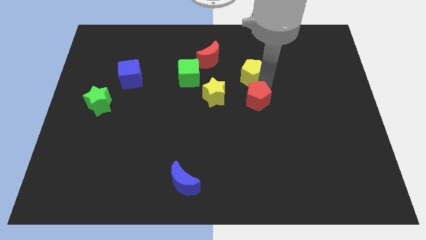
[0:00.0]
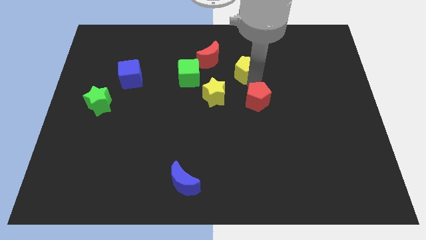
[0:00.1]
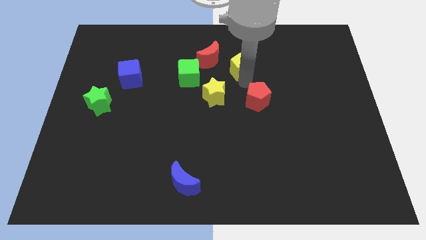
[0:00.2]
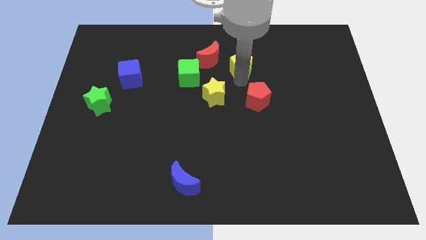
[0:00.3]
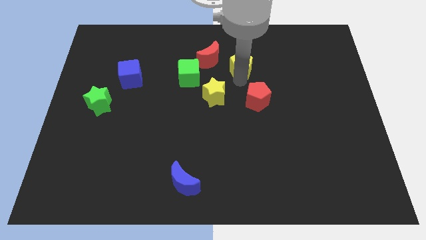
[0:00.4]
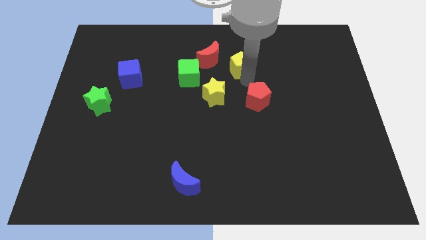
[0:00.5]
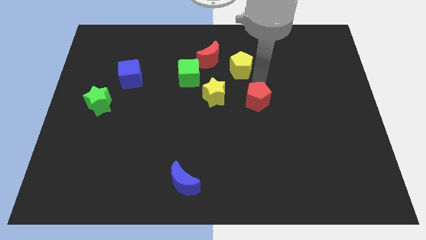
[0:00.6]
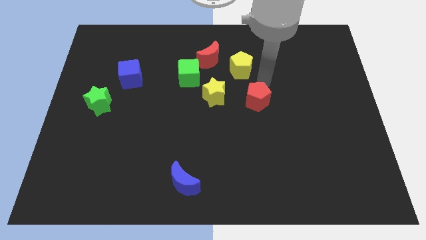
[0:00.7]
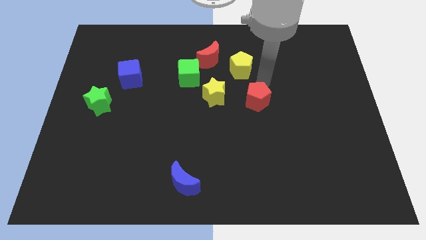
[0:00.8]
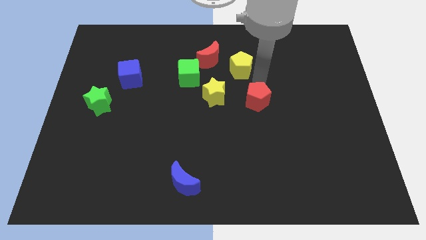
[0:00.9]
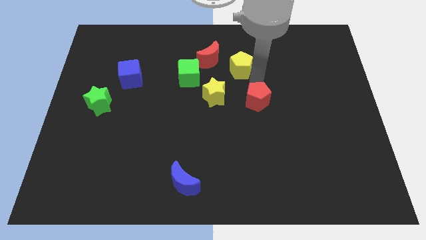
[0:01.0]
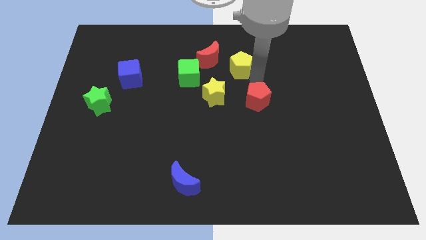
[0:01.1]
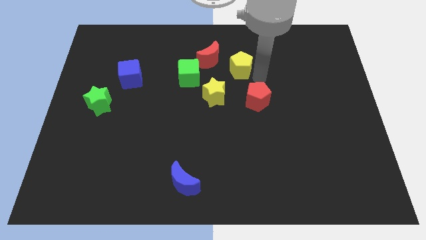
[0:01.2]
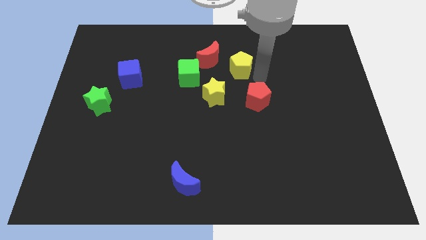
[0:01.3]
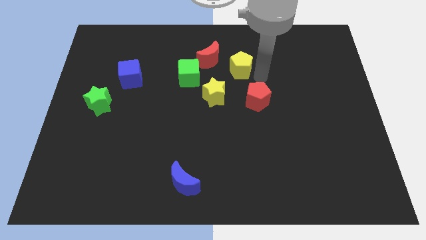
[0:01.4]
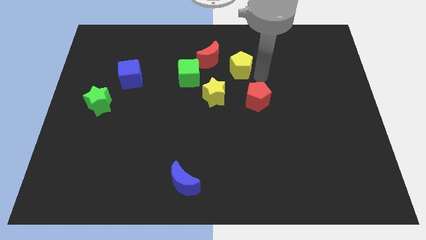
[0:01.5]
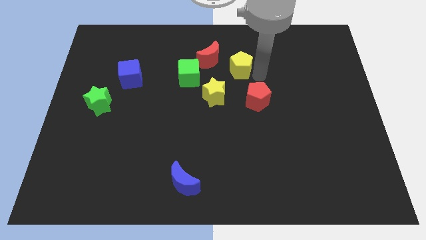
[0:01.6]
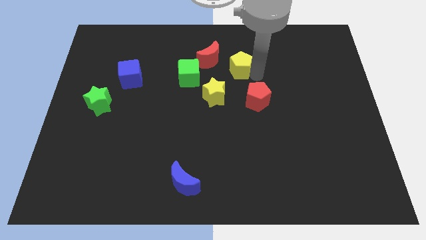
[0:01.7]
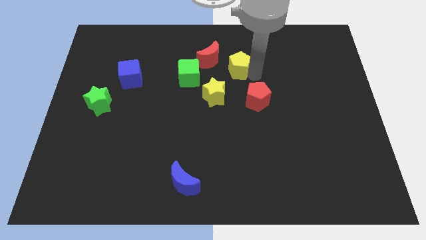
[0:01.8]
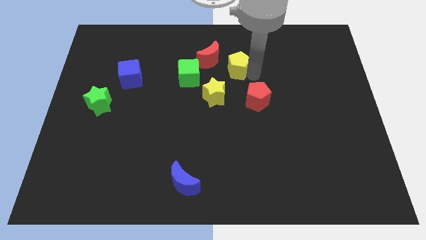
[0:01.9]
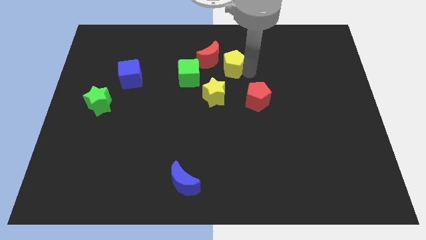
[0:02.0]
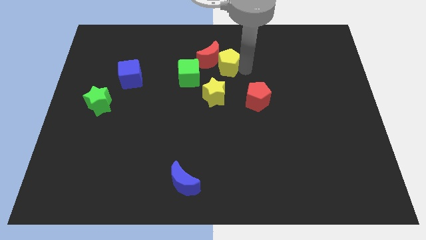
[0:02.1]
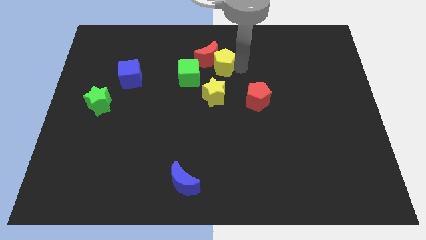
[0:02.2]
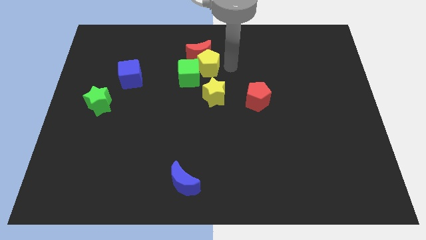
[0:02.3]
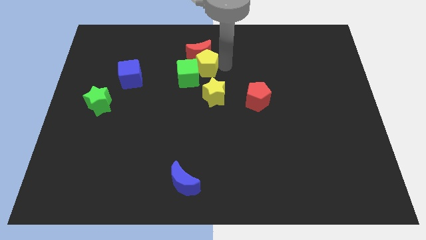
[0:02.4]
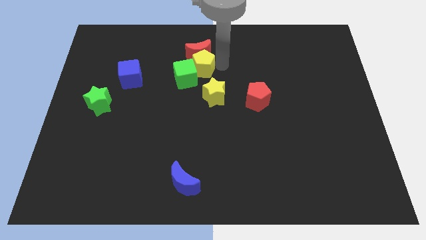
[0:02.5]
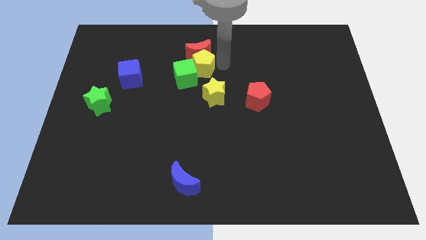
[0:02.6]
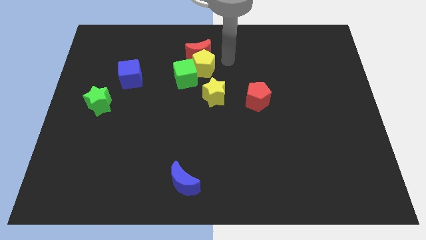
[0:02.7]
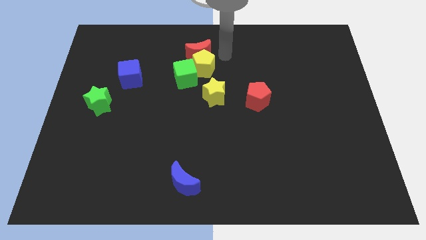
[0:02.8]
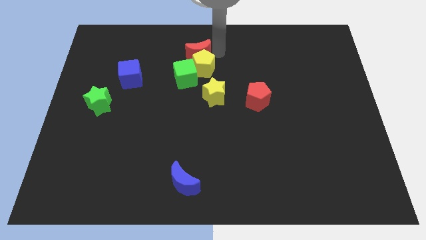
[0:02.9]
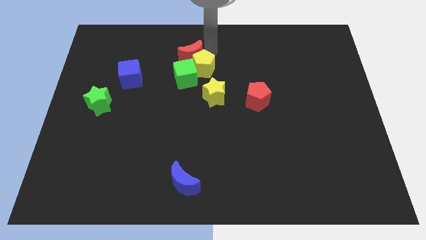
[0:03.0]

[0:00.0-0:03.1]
move yellow pentagon into green cube and red crescent

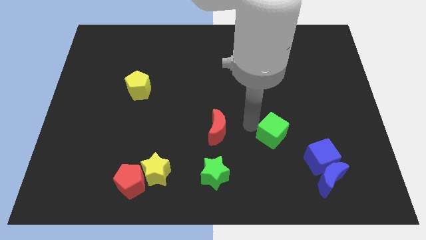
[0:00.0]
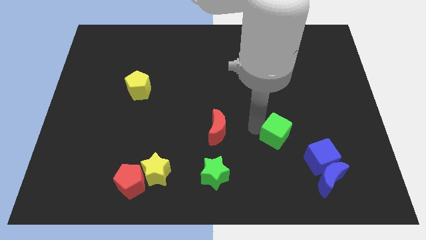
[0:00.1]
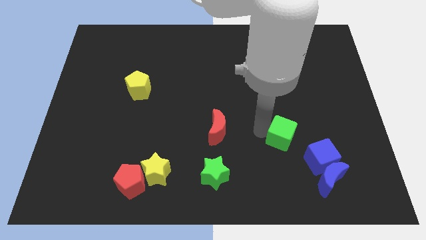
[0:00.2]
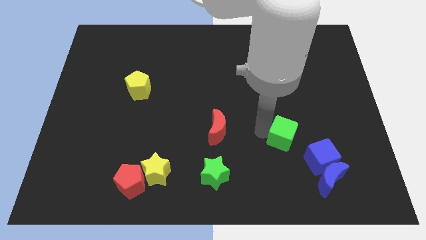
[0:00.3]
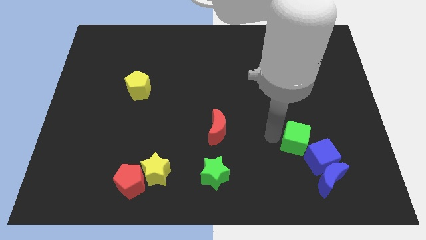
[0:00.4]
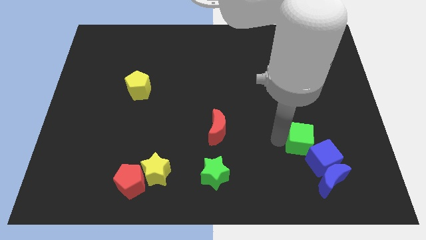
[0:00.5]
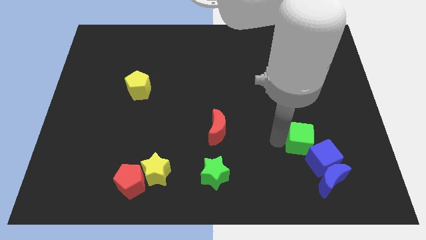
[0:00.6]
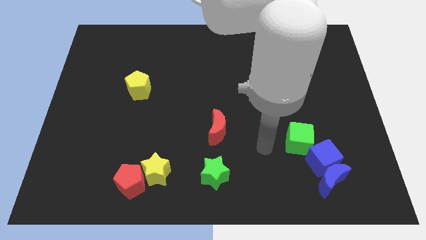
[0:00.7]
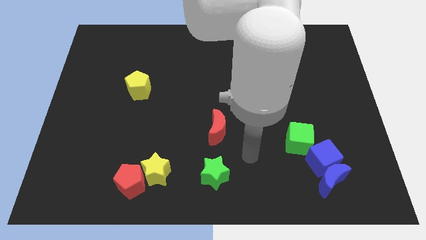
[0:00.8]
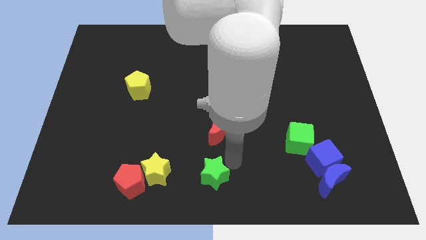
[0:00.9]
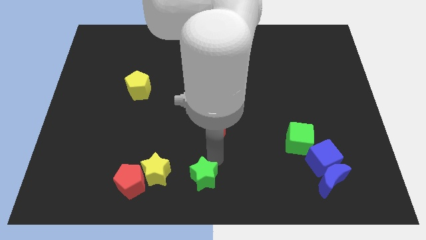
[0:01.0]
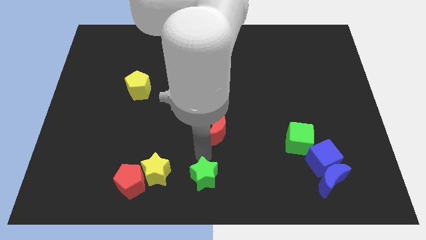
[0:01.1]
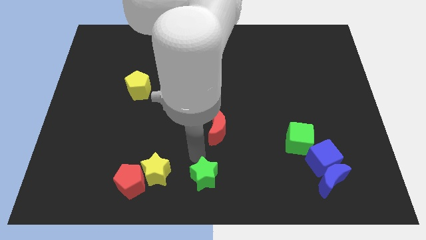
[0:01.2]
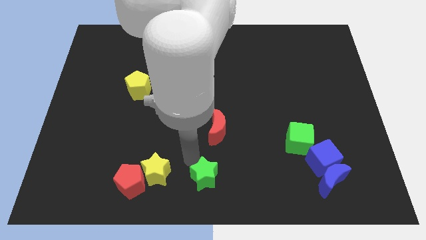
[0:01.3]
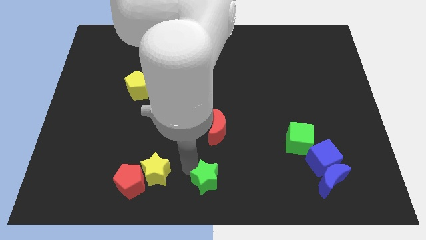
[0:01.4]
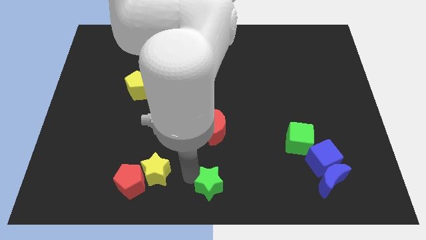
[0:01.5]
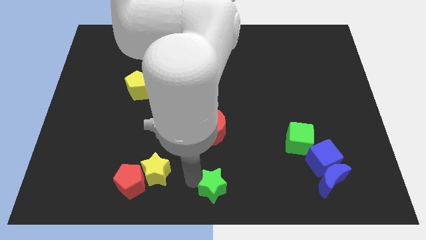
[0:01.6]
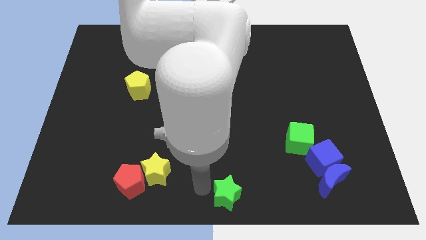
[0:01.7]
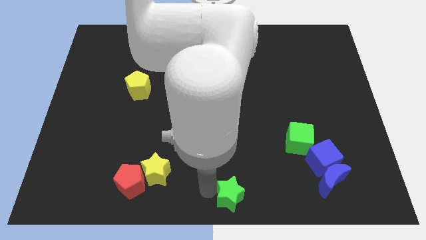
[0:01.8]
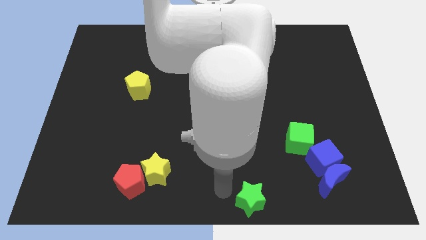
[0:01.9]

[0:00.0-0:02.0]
place the green cube at the top right of the blue cube

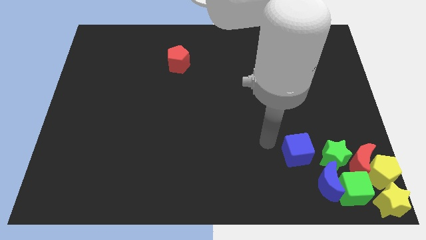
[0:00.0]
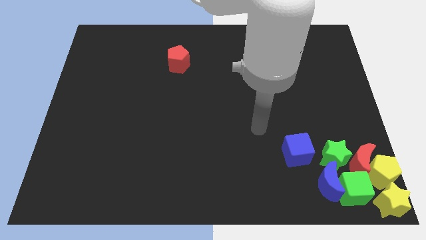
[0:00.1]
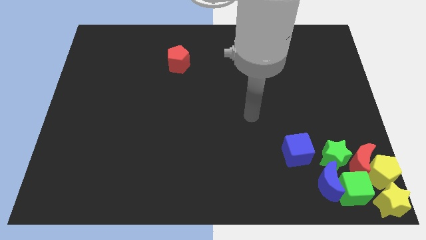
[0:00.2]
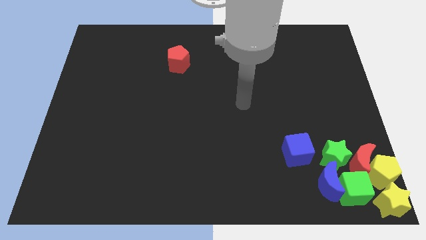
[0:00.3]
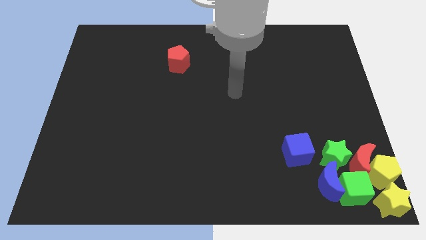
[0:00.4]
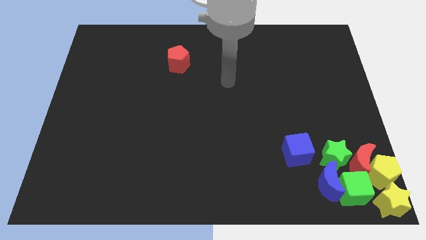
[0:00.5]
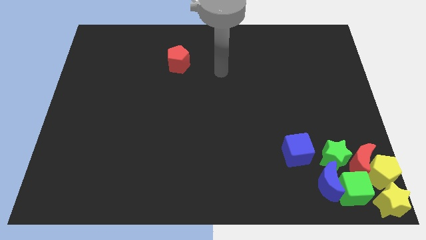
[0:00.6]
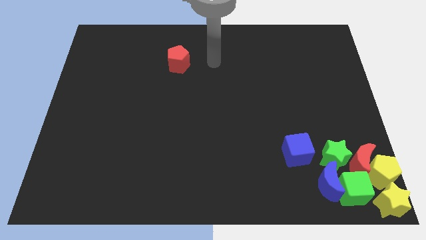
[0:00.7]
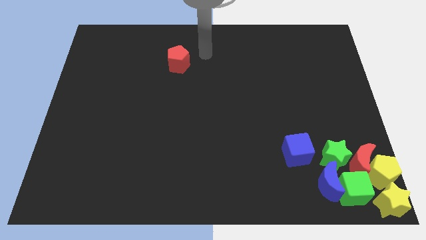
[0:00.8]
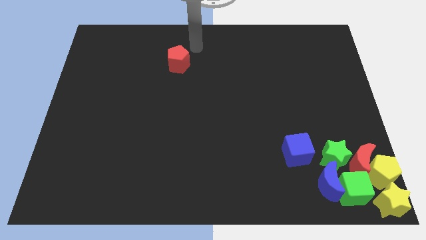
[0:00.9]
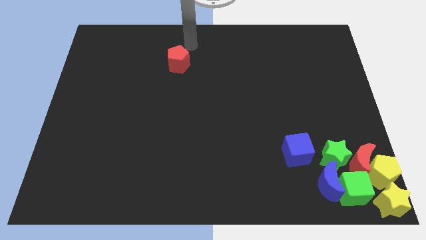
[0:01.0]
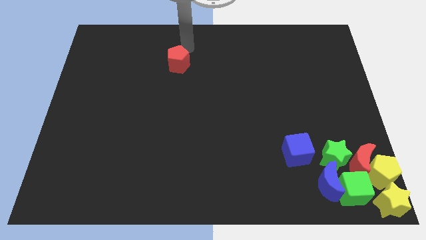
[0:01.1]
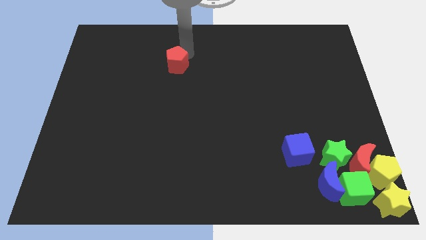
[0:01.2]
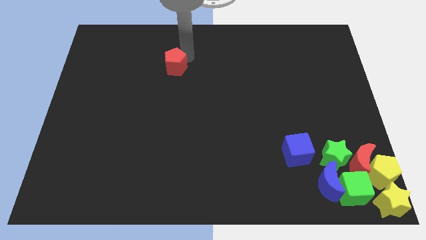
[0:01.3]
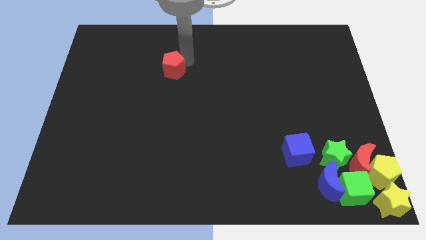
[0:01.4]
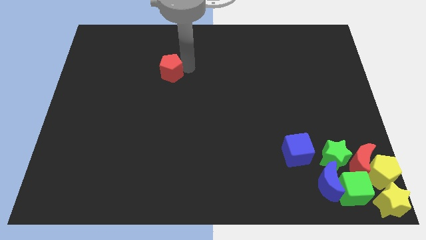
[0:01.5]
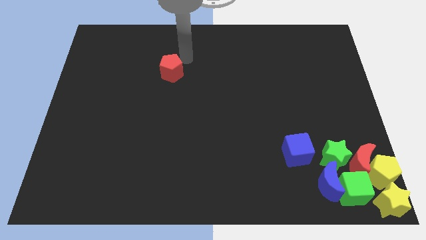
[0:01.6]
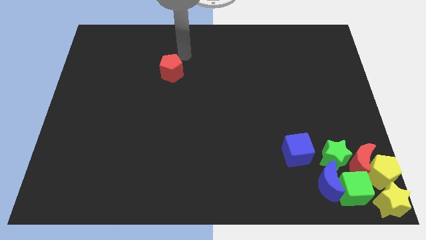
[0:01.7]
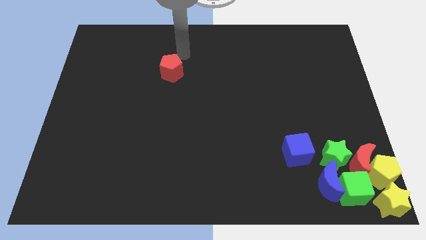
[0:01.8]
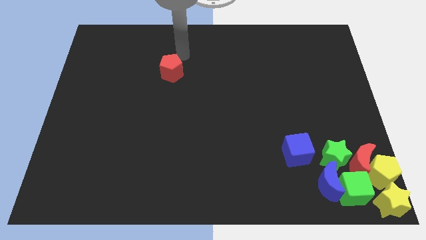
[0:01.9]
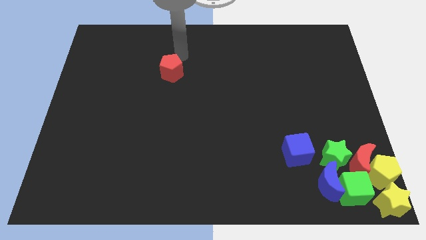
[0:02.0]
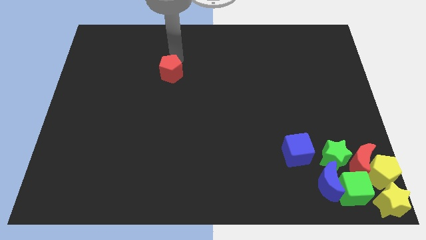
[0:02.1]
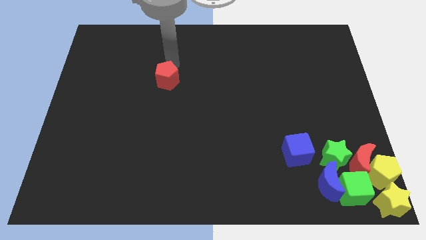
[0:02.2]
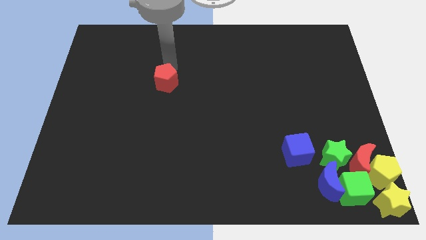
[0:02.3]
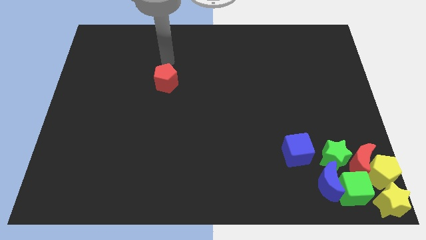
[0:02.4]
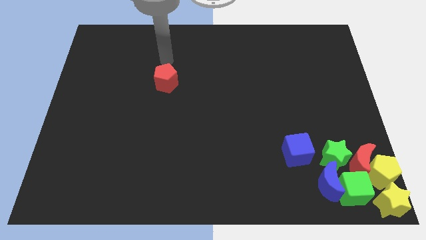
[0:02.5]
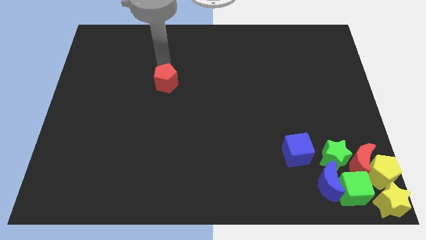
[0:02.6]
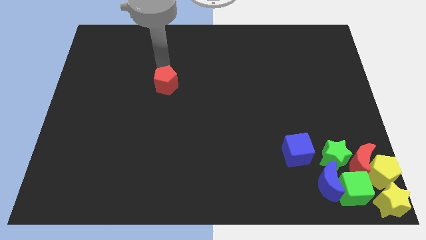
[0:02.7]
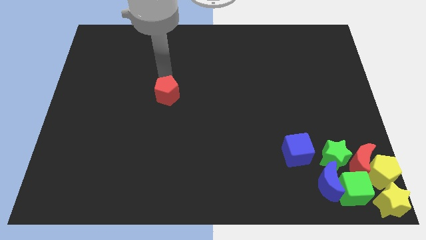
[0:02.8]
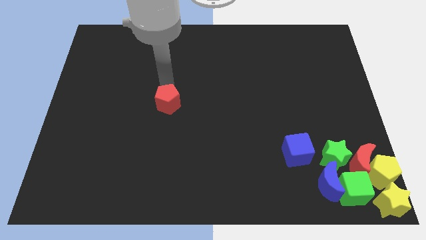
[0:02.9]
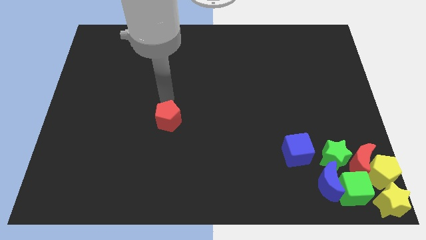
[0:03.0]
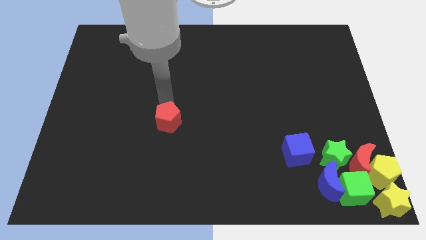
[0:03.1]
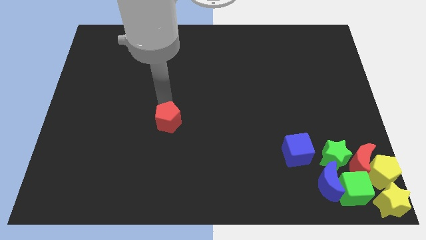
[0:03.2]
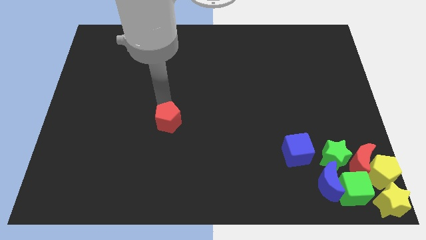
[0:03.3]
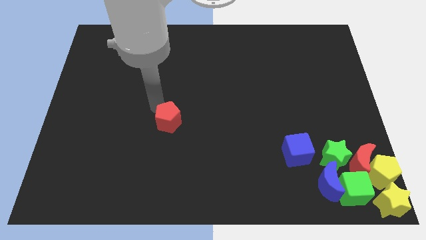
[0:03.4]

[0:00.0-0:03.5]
slide the red pentagon downwards

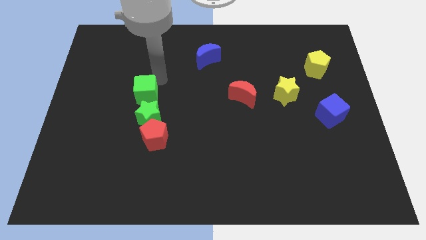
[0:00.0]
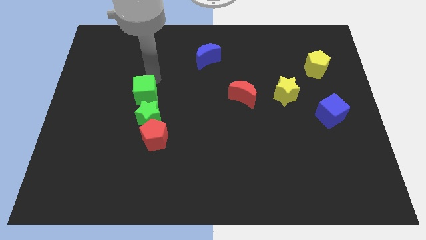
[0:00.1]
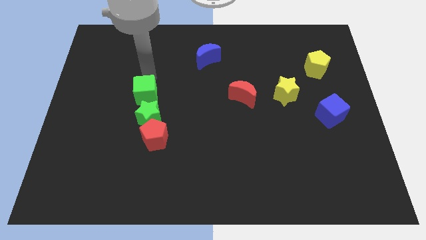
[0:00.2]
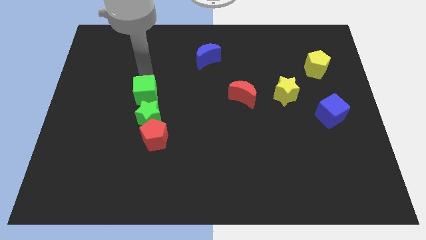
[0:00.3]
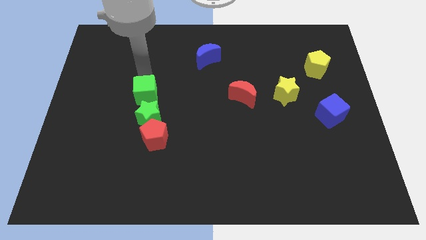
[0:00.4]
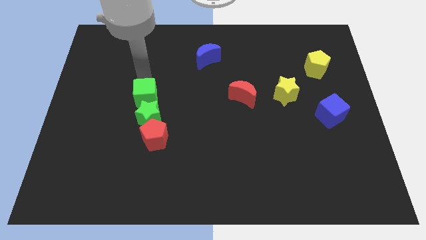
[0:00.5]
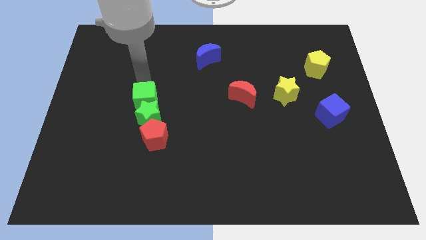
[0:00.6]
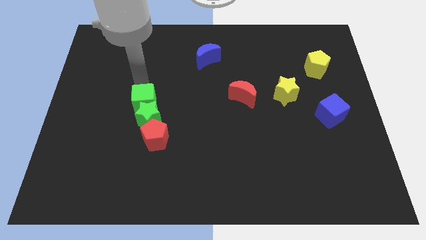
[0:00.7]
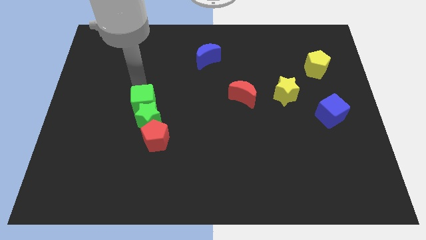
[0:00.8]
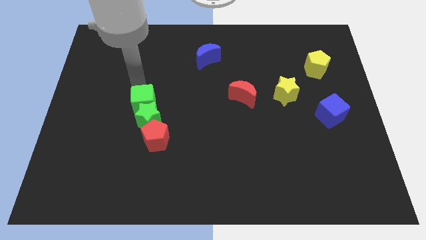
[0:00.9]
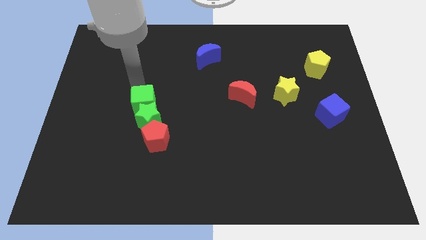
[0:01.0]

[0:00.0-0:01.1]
slide green cube into green star
